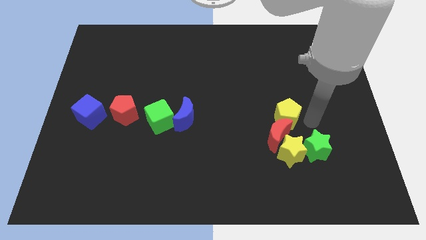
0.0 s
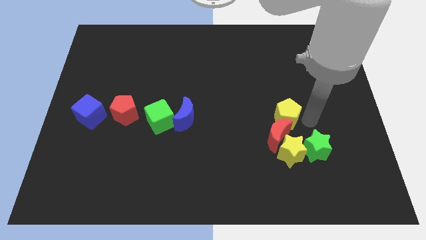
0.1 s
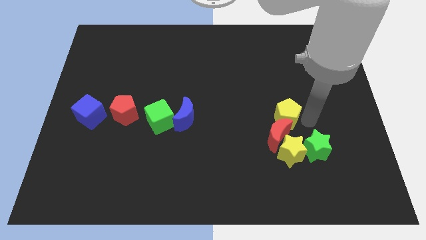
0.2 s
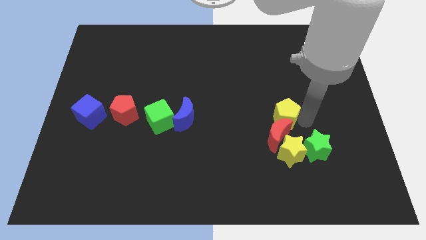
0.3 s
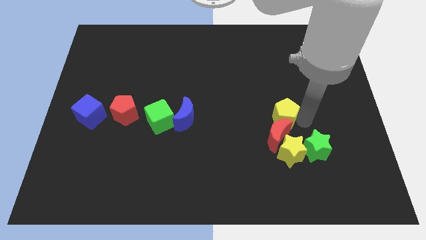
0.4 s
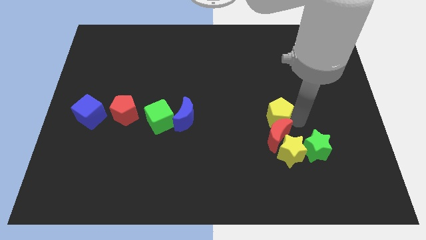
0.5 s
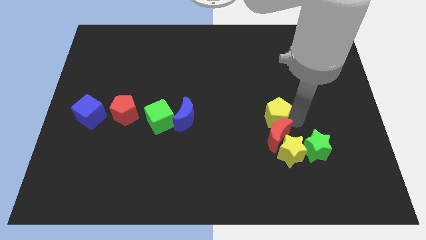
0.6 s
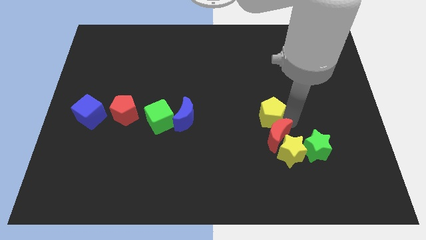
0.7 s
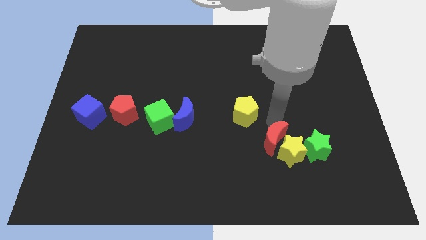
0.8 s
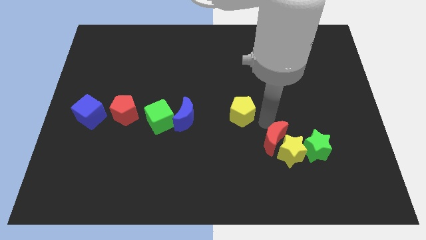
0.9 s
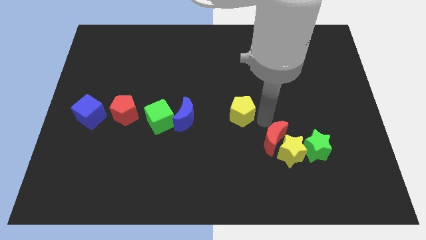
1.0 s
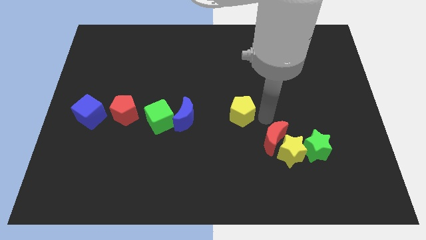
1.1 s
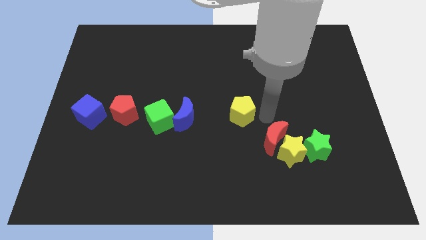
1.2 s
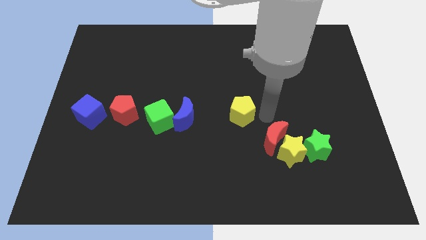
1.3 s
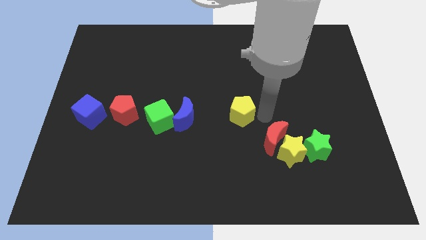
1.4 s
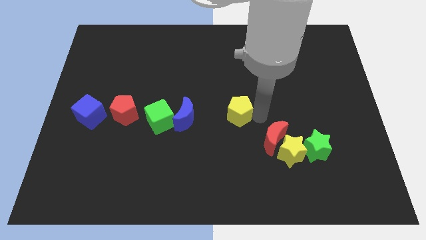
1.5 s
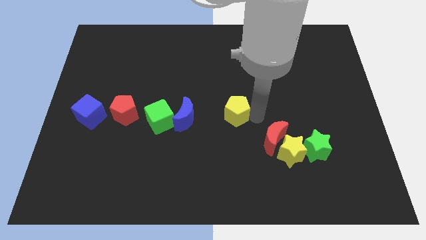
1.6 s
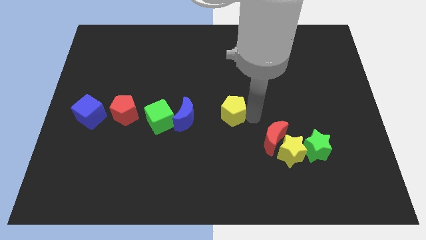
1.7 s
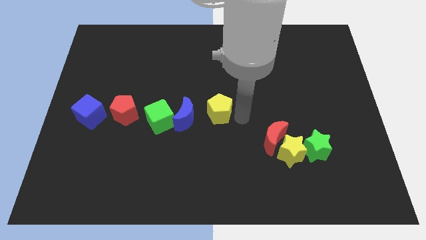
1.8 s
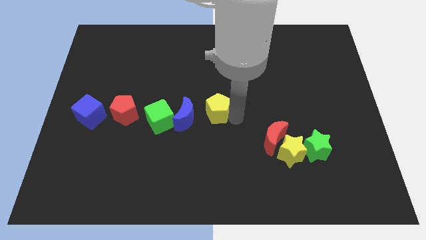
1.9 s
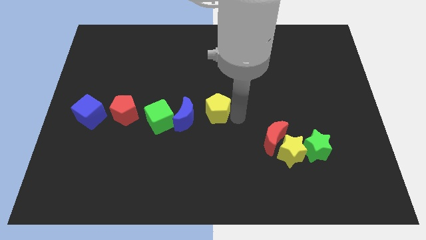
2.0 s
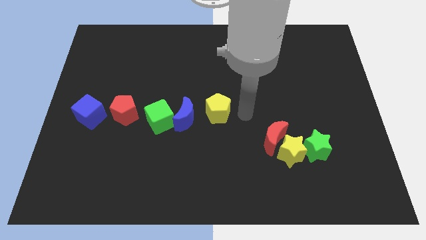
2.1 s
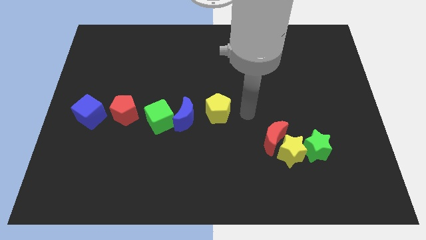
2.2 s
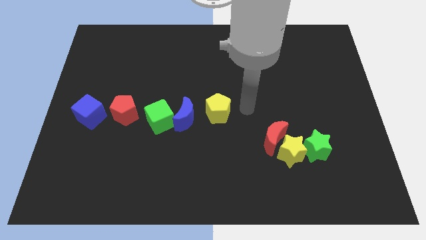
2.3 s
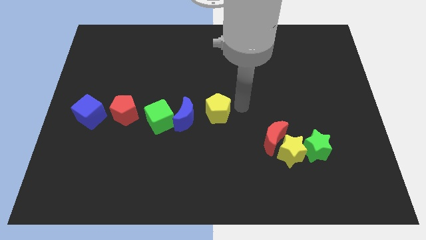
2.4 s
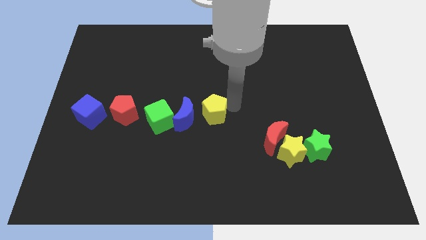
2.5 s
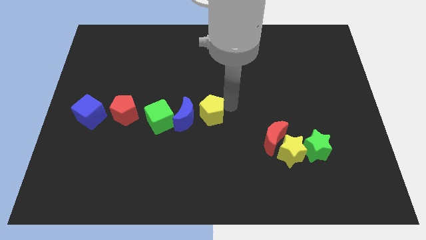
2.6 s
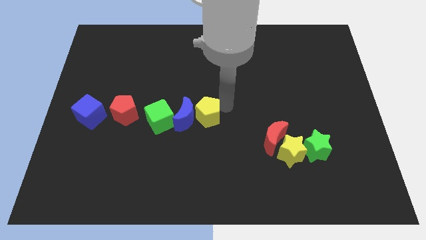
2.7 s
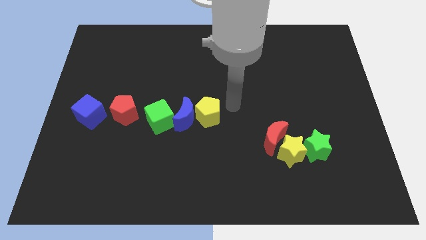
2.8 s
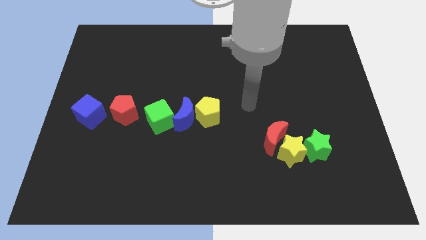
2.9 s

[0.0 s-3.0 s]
drag yellow pentagon towards blue moon

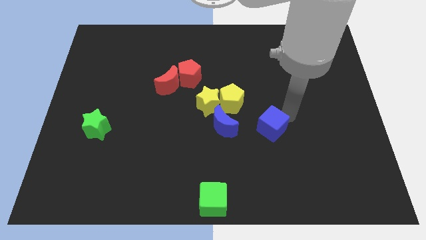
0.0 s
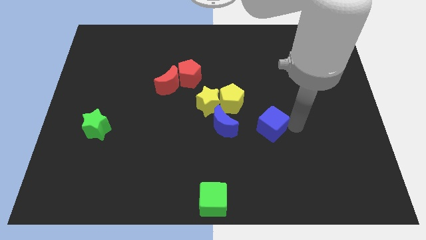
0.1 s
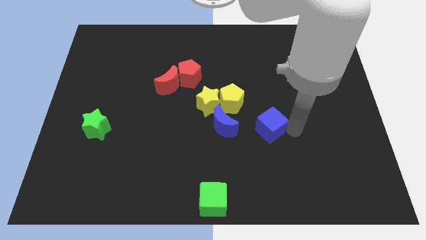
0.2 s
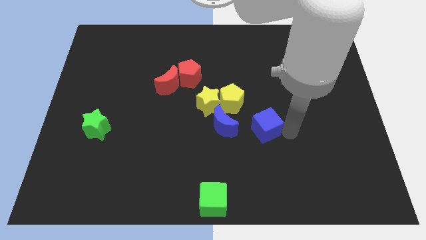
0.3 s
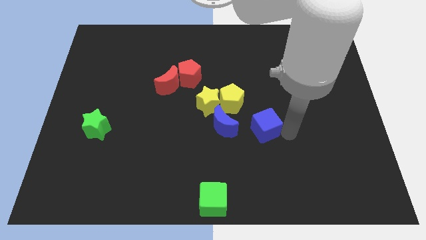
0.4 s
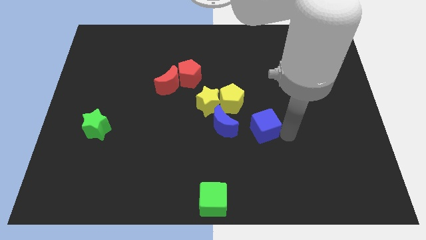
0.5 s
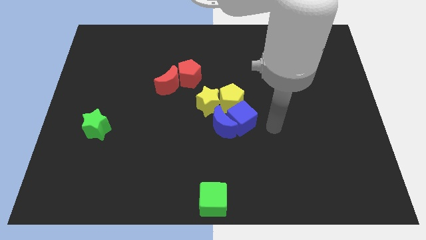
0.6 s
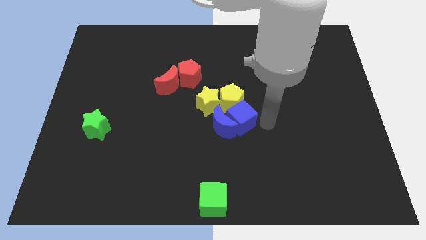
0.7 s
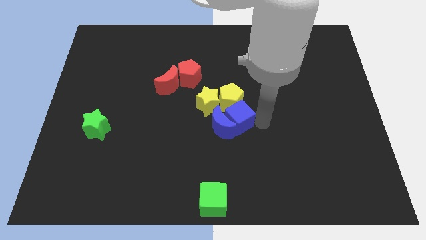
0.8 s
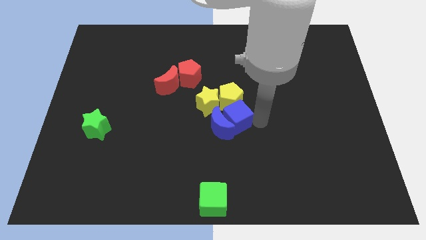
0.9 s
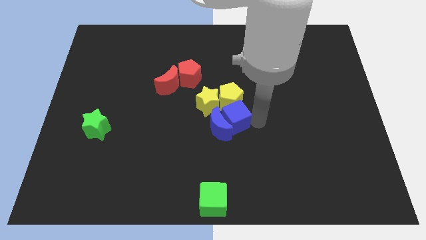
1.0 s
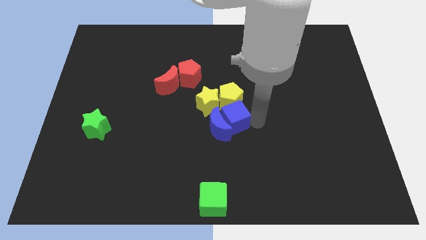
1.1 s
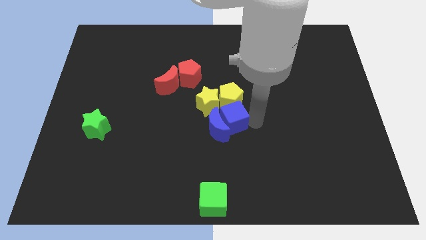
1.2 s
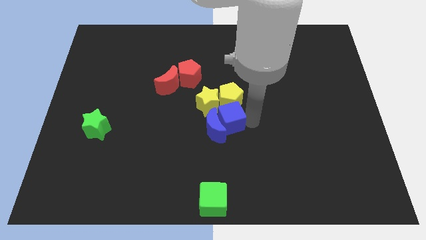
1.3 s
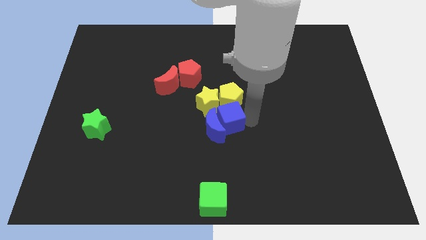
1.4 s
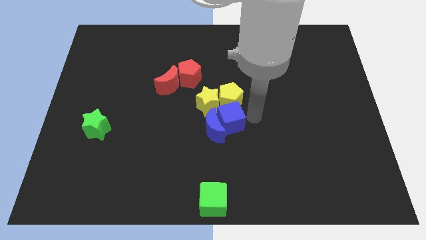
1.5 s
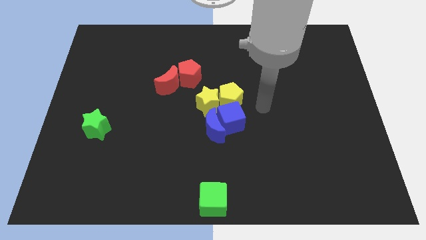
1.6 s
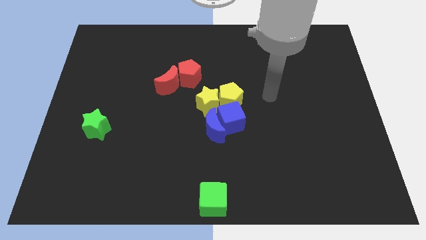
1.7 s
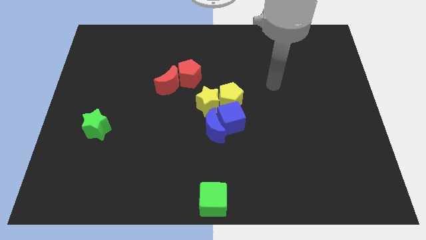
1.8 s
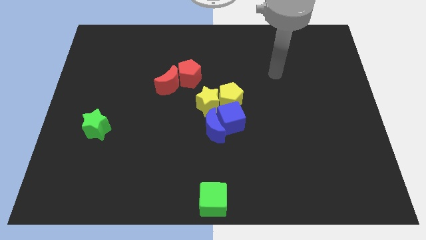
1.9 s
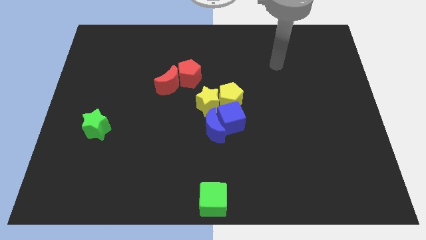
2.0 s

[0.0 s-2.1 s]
move the blue cube to the bottom of the yellow pentagon

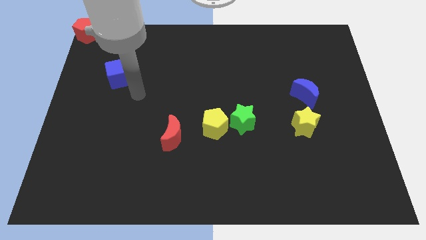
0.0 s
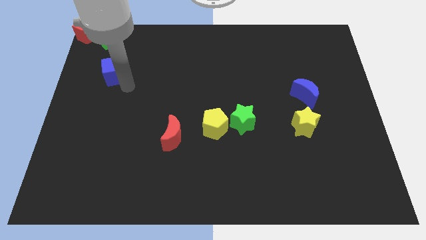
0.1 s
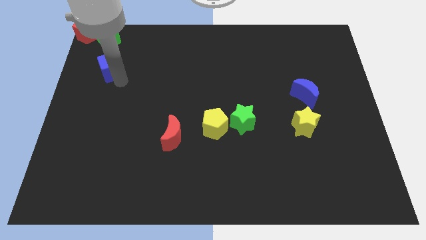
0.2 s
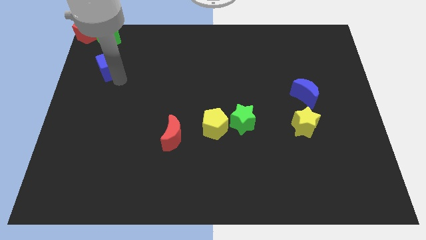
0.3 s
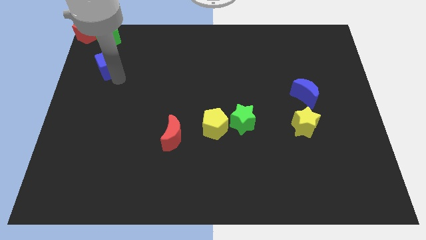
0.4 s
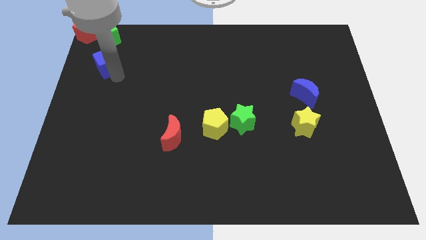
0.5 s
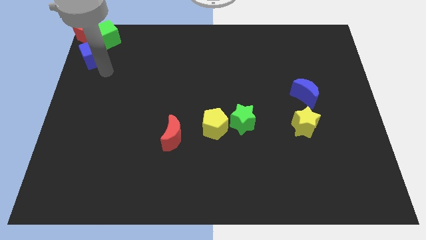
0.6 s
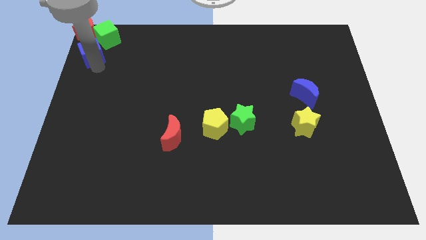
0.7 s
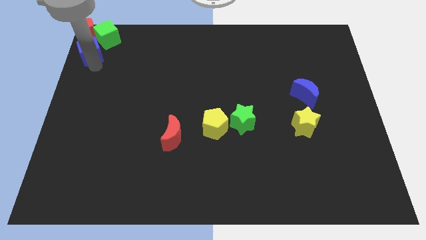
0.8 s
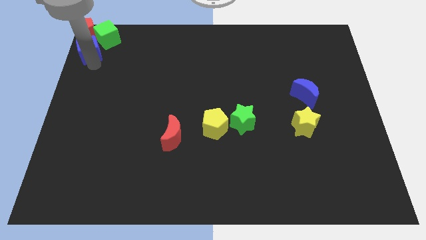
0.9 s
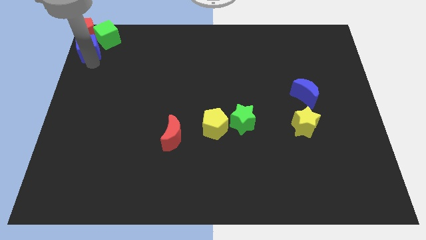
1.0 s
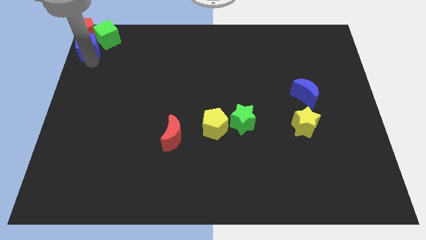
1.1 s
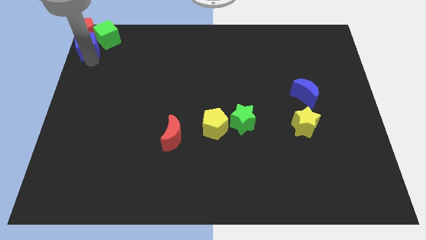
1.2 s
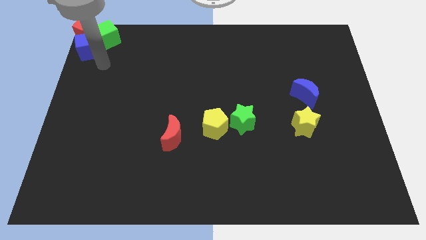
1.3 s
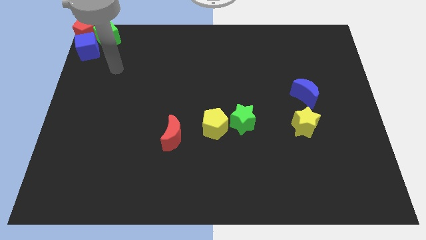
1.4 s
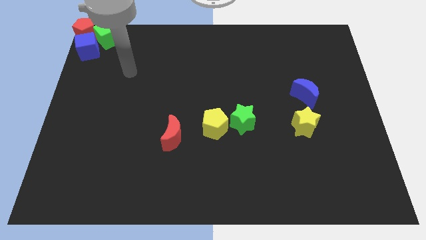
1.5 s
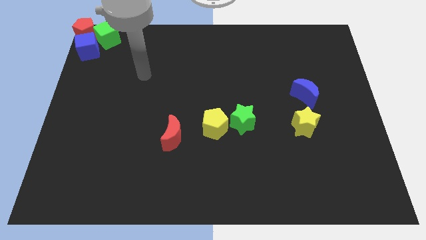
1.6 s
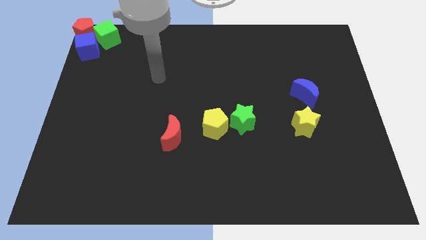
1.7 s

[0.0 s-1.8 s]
push the blue cube into the red pentagon

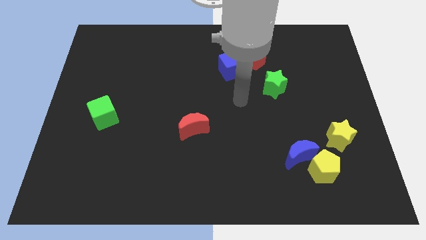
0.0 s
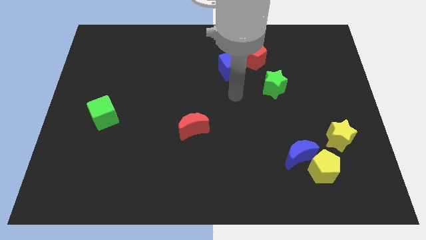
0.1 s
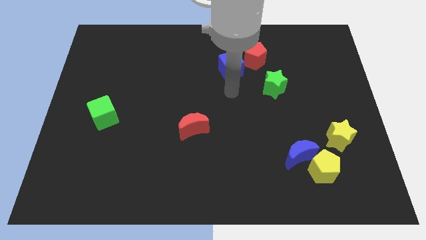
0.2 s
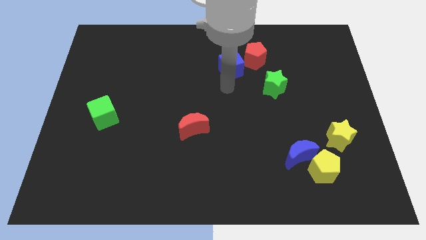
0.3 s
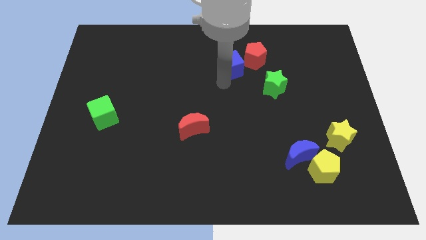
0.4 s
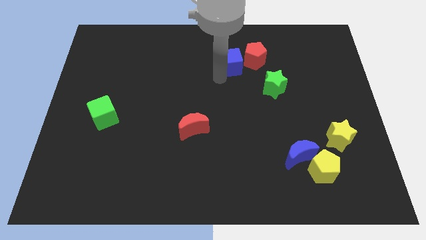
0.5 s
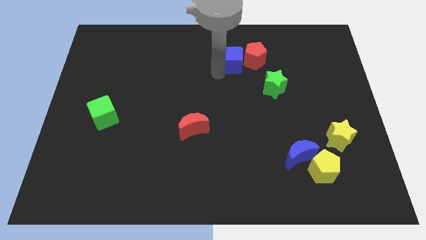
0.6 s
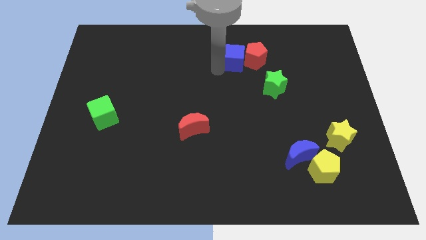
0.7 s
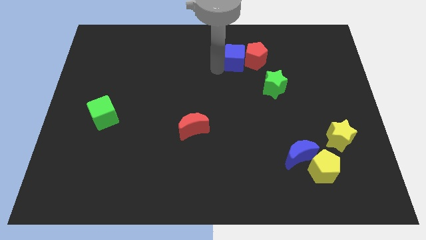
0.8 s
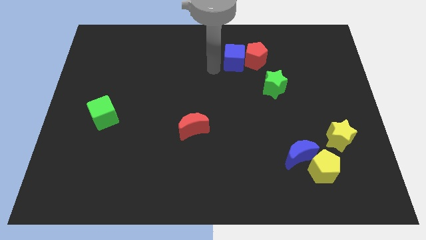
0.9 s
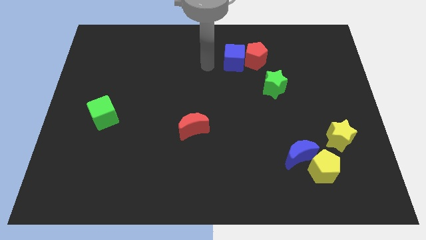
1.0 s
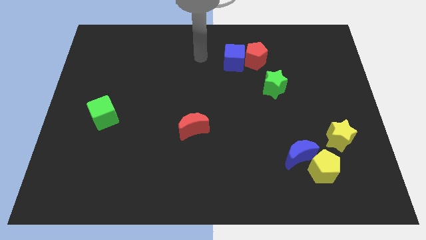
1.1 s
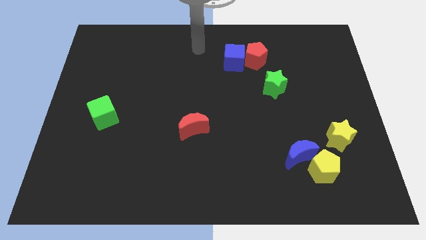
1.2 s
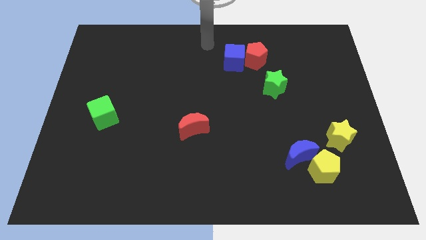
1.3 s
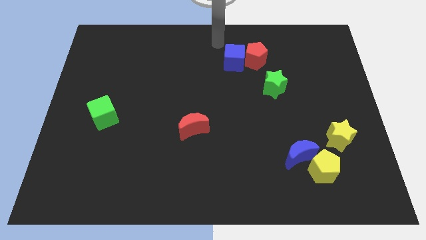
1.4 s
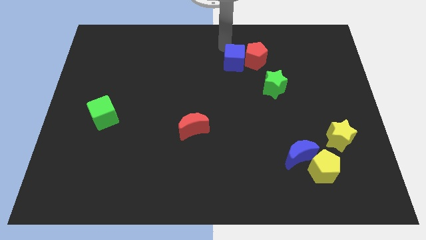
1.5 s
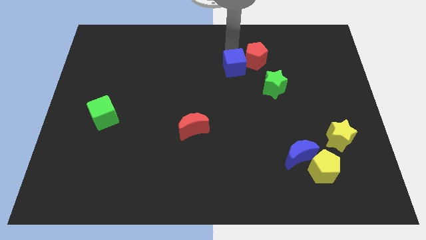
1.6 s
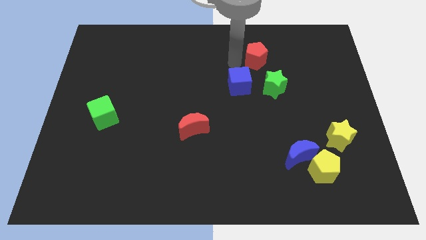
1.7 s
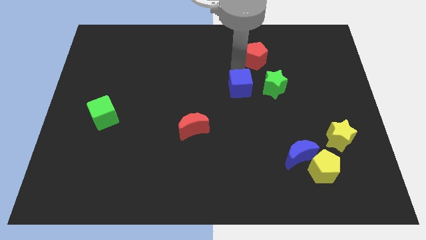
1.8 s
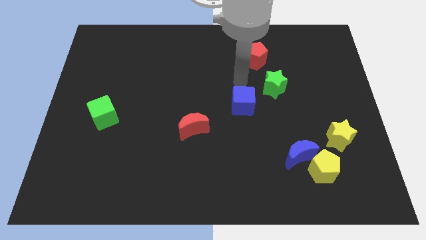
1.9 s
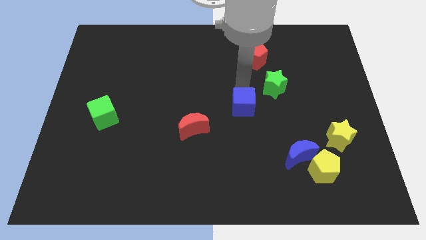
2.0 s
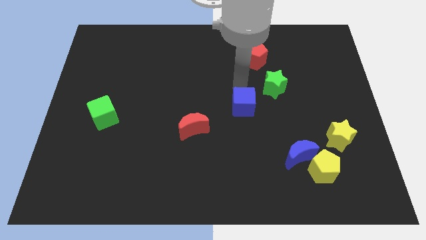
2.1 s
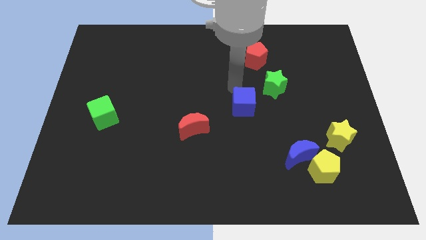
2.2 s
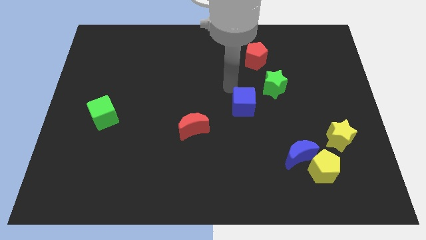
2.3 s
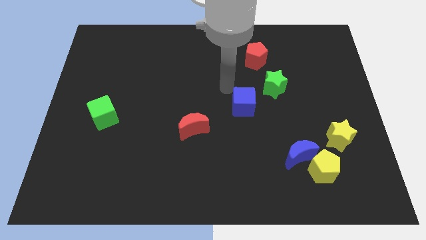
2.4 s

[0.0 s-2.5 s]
place the blue cube diagonally left to the green star
